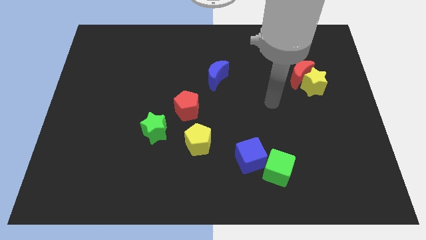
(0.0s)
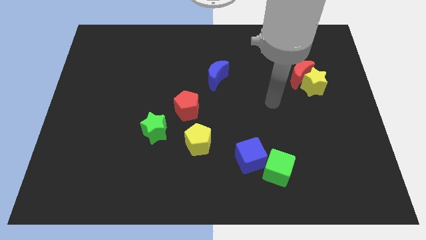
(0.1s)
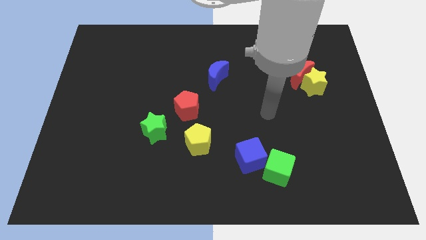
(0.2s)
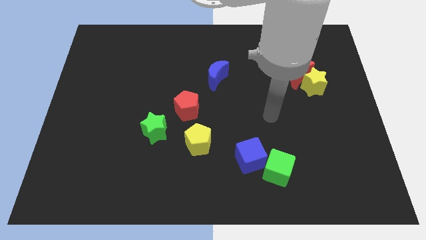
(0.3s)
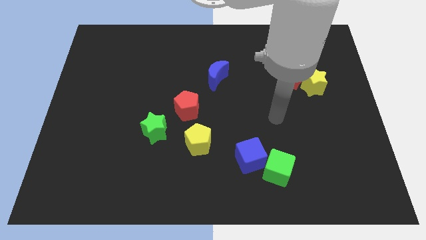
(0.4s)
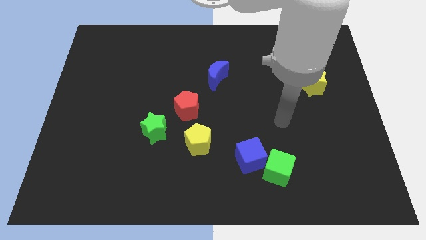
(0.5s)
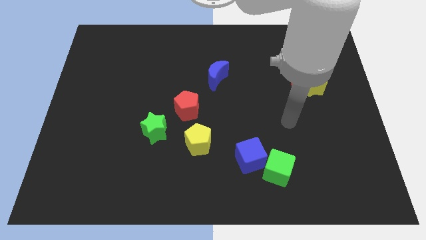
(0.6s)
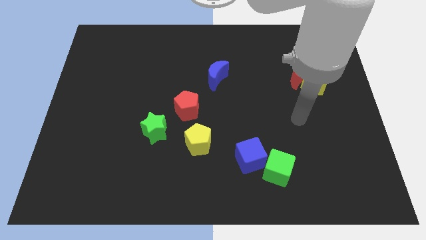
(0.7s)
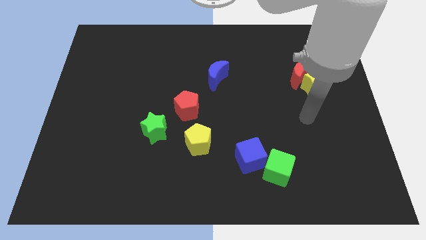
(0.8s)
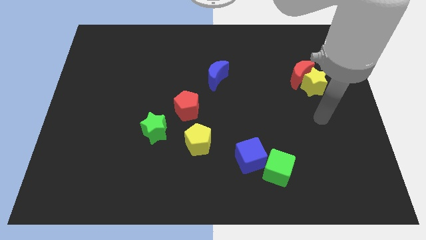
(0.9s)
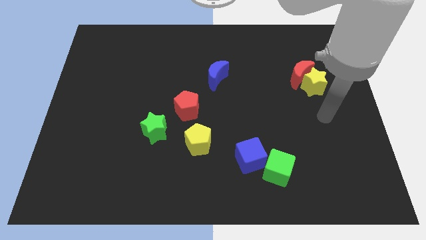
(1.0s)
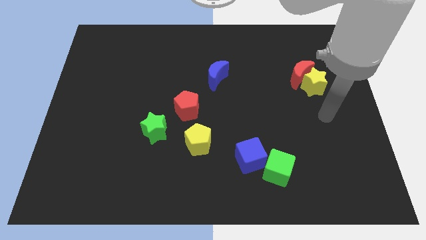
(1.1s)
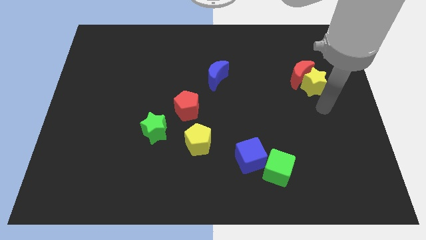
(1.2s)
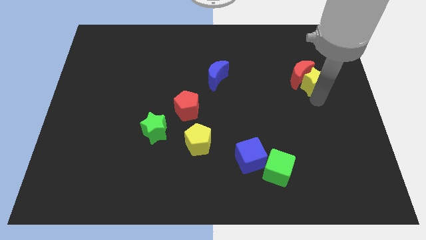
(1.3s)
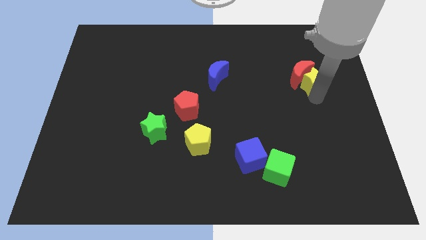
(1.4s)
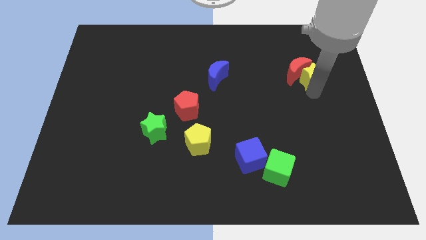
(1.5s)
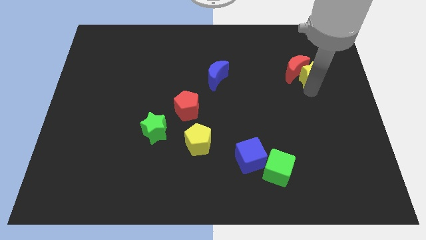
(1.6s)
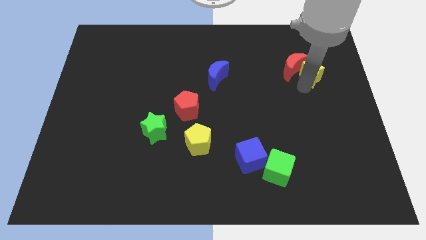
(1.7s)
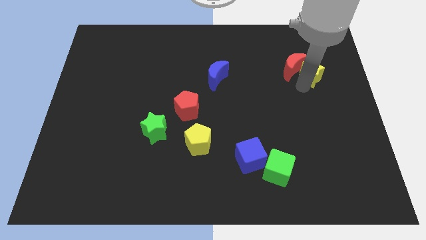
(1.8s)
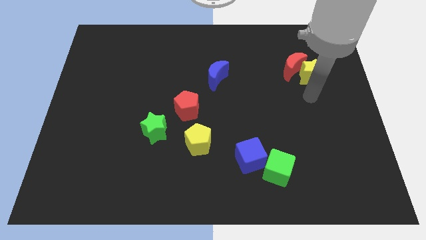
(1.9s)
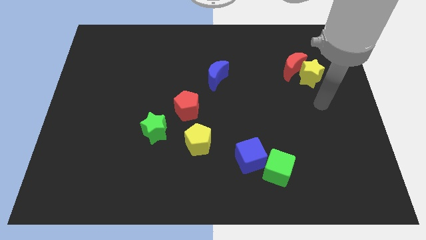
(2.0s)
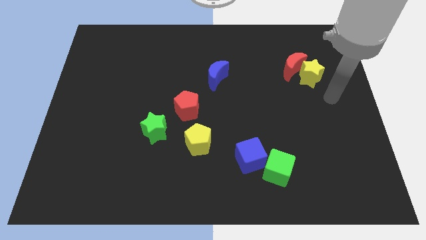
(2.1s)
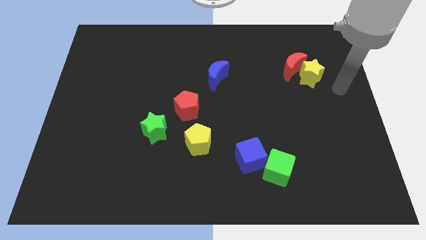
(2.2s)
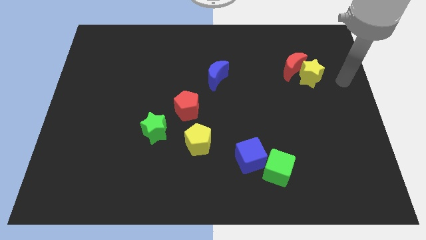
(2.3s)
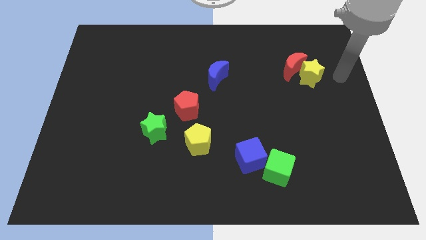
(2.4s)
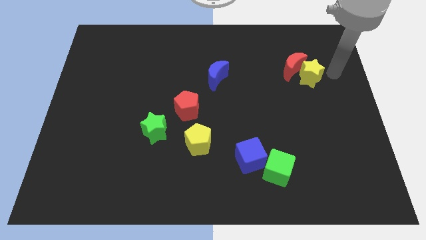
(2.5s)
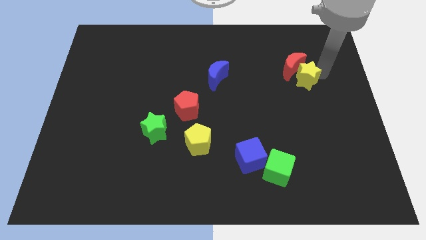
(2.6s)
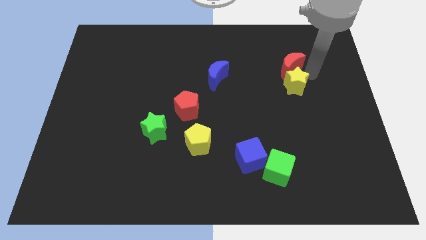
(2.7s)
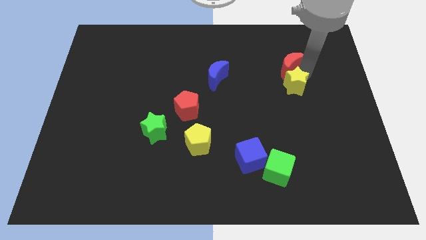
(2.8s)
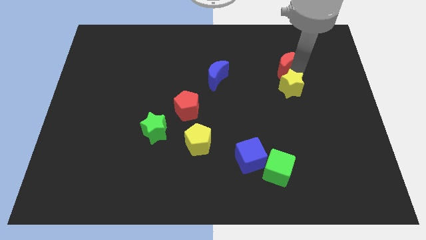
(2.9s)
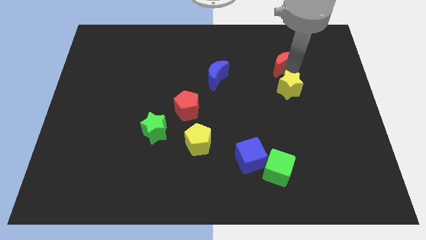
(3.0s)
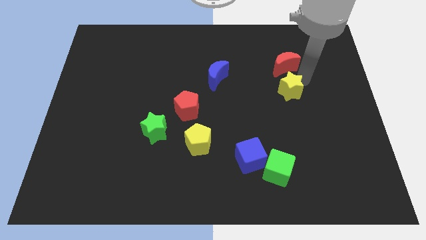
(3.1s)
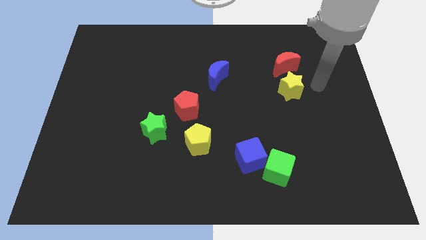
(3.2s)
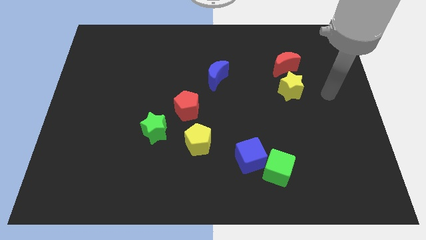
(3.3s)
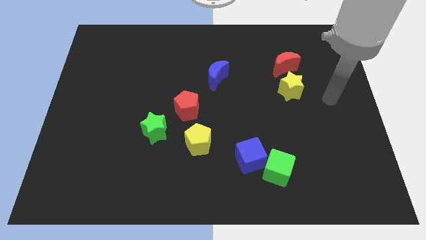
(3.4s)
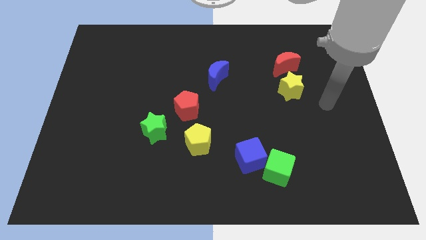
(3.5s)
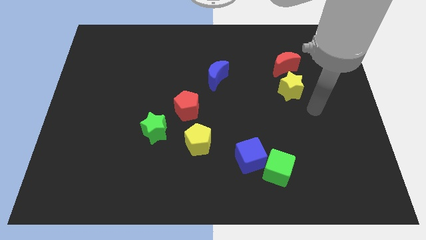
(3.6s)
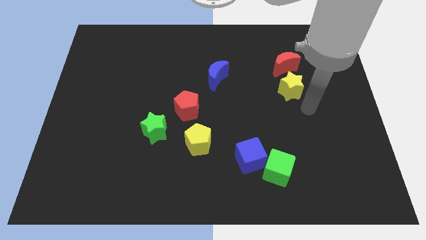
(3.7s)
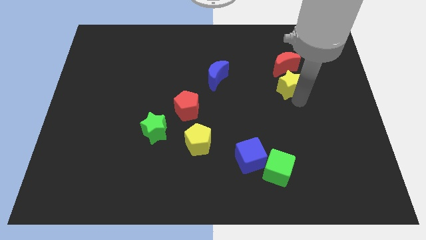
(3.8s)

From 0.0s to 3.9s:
separate the yellow star and red moon

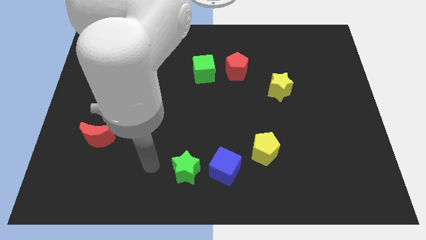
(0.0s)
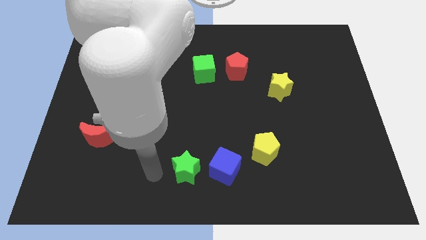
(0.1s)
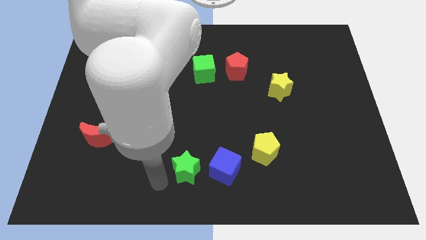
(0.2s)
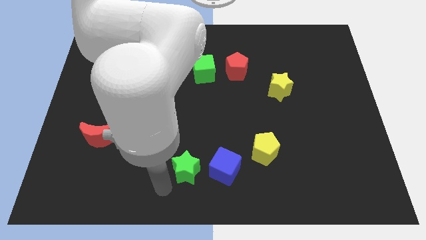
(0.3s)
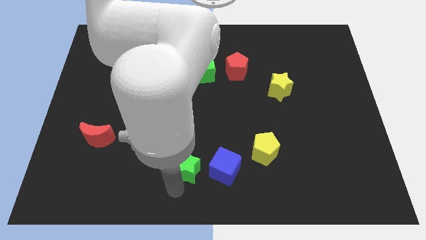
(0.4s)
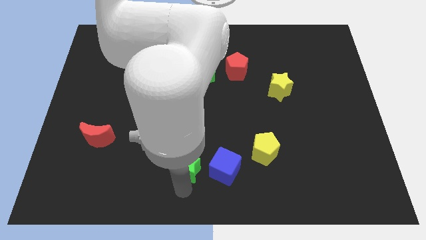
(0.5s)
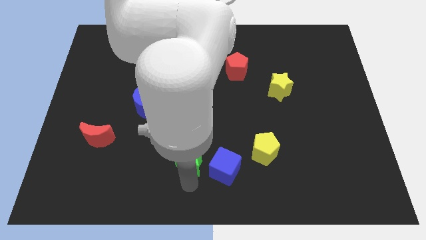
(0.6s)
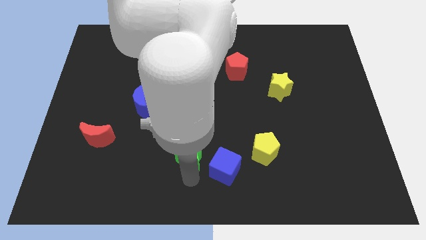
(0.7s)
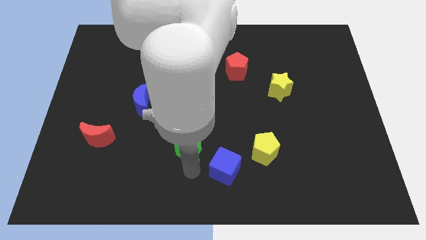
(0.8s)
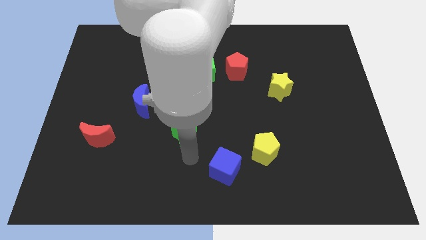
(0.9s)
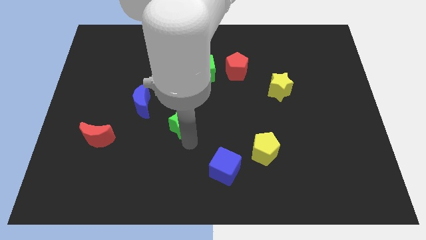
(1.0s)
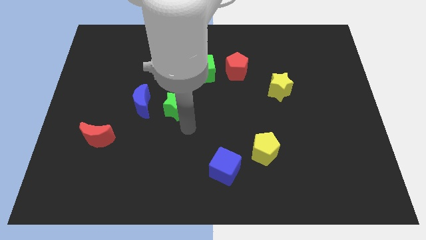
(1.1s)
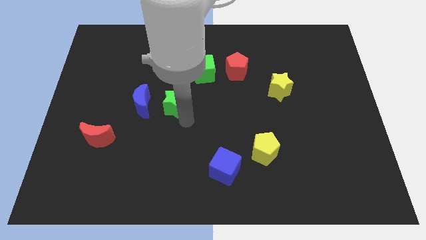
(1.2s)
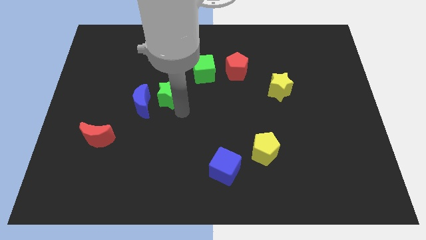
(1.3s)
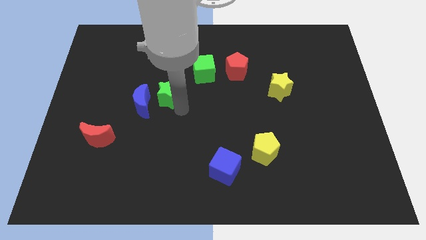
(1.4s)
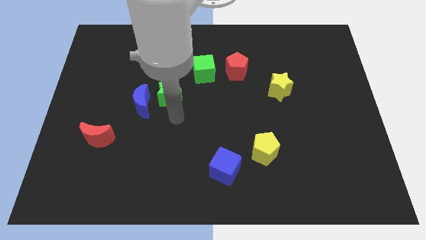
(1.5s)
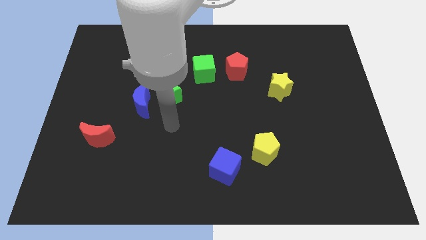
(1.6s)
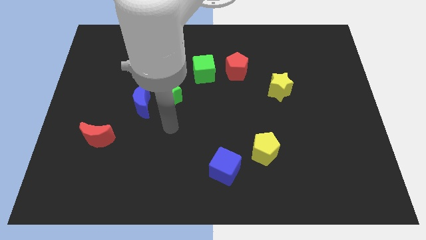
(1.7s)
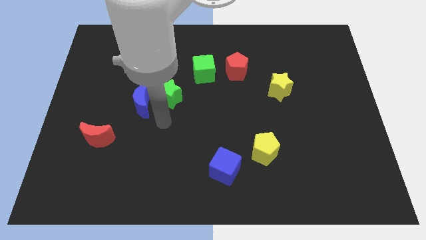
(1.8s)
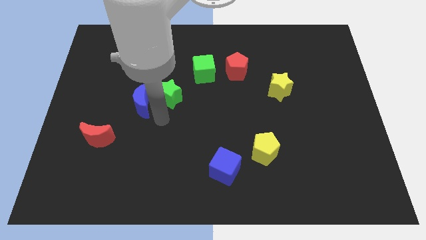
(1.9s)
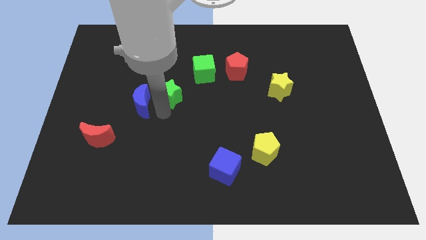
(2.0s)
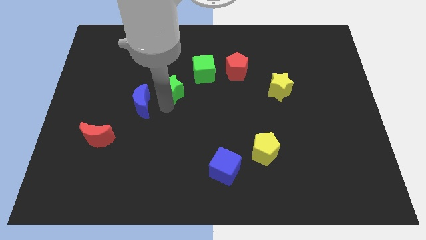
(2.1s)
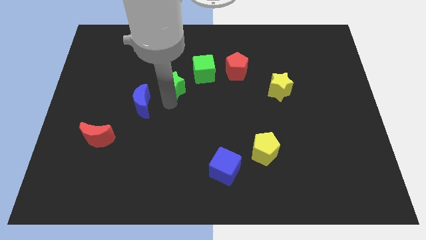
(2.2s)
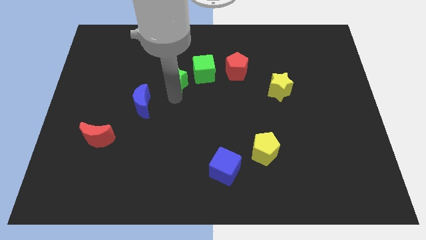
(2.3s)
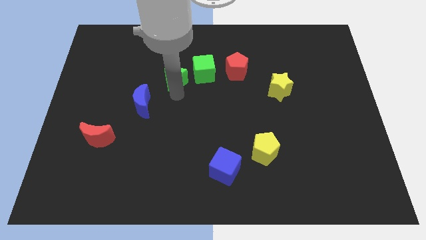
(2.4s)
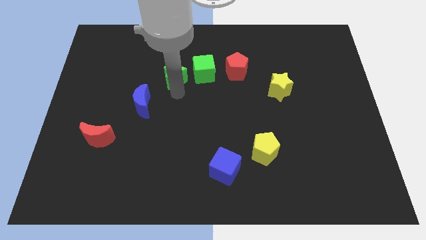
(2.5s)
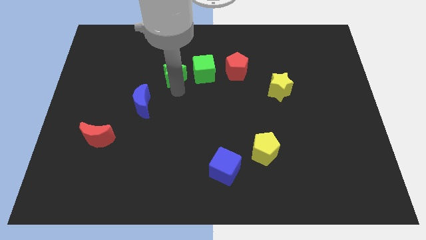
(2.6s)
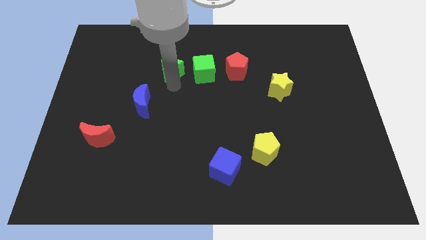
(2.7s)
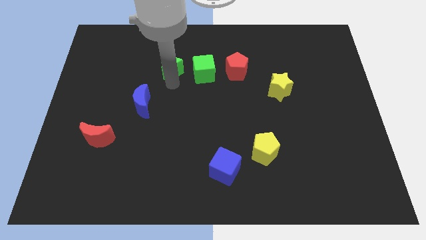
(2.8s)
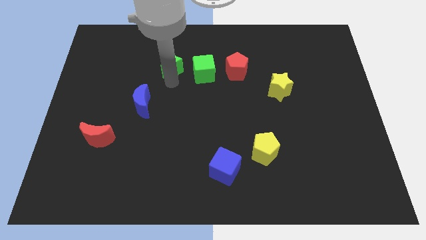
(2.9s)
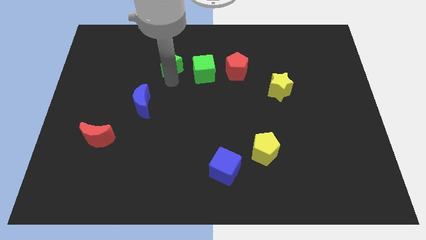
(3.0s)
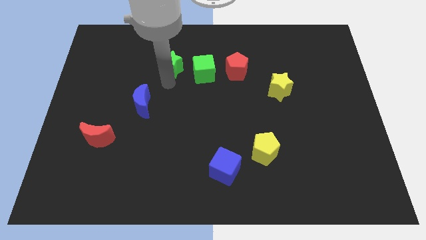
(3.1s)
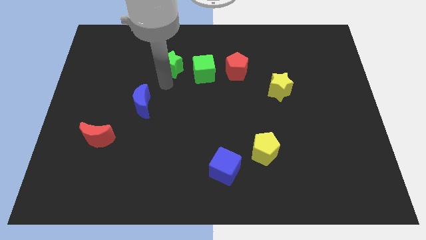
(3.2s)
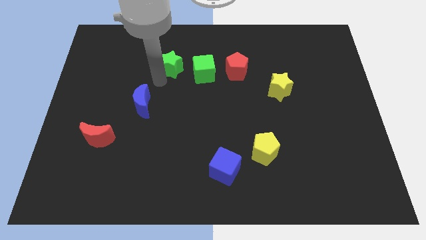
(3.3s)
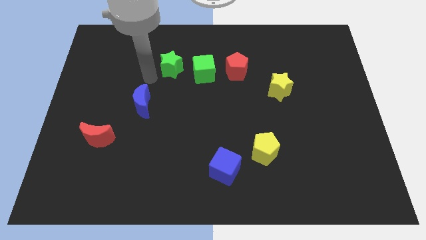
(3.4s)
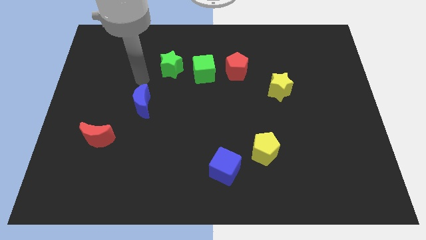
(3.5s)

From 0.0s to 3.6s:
place green star to the left of the green cube

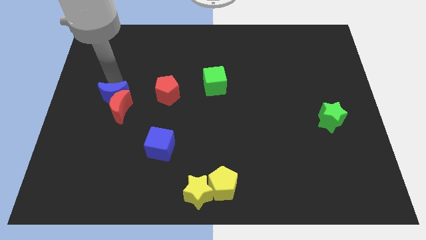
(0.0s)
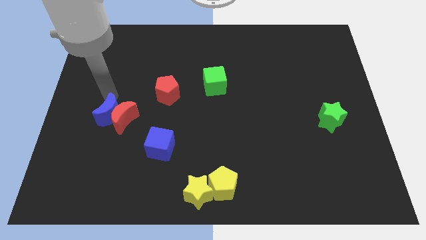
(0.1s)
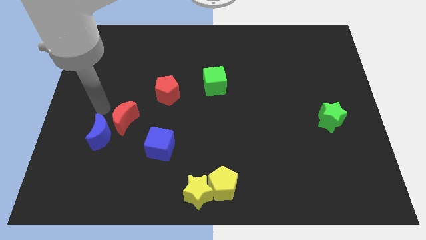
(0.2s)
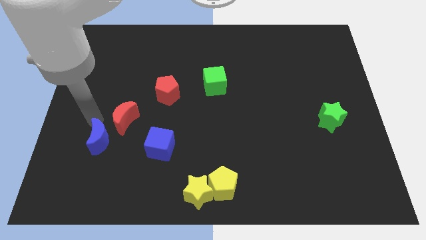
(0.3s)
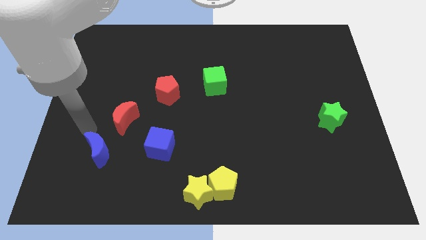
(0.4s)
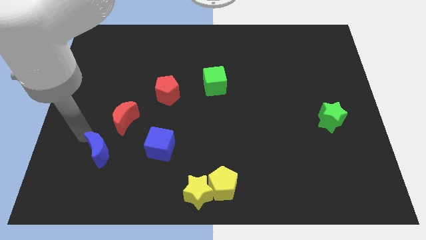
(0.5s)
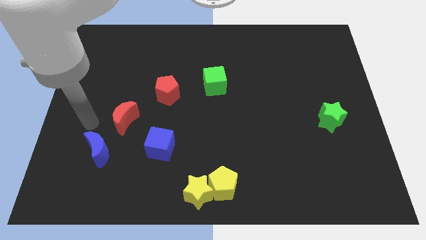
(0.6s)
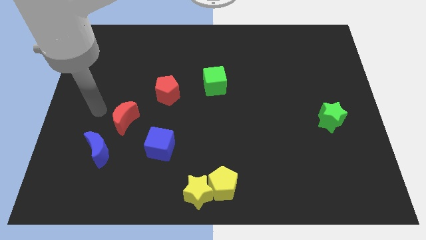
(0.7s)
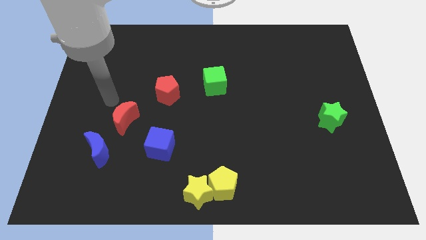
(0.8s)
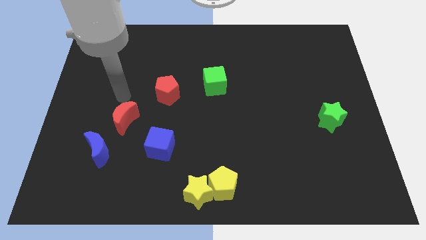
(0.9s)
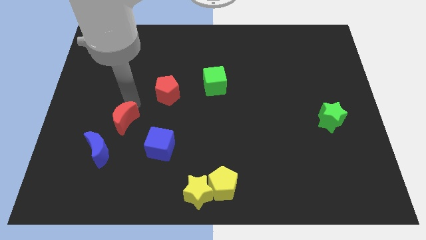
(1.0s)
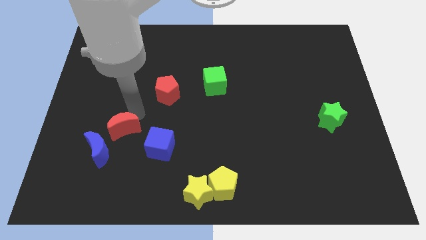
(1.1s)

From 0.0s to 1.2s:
separate the red moon and blue moon
